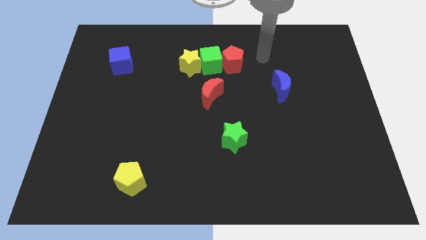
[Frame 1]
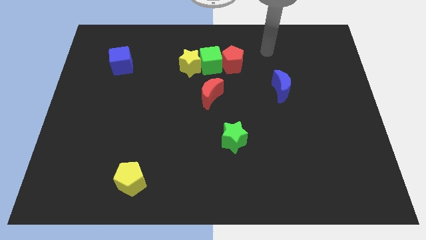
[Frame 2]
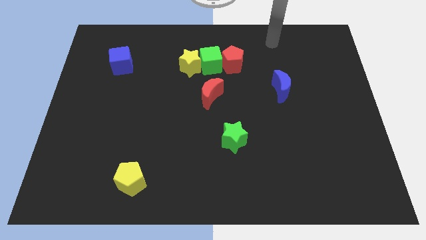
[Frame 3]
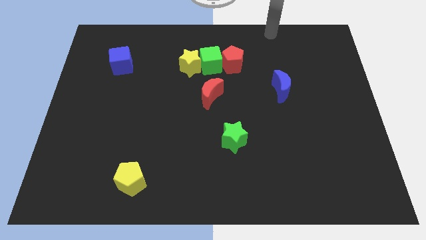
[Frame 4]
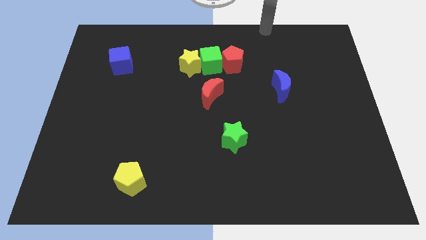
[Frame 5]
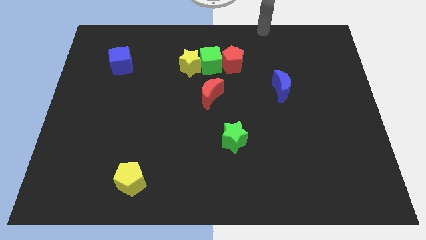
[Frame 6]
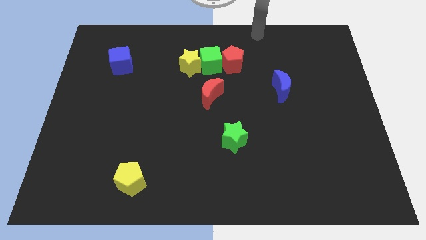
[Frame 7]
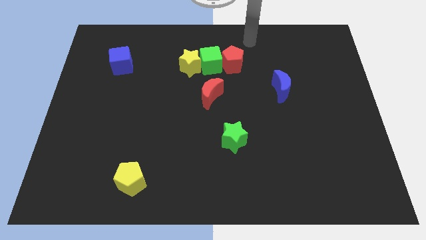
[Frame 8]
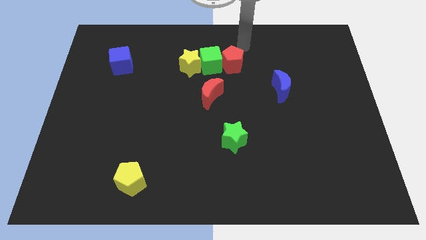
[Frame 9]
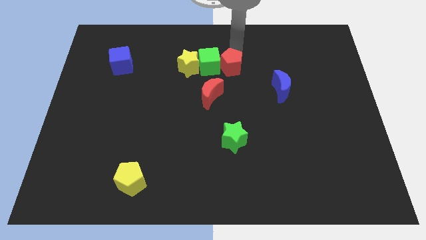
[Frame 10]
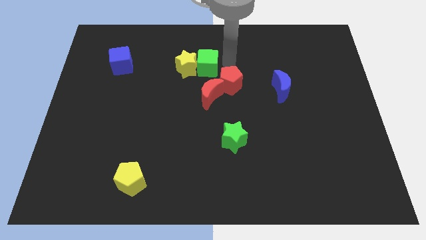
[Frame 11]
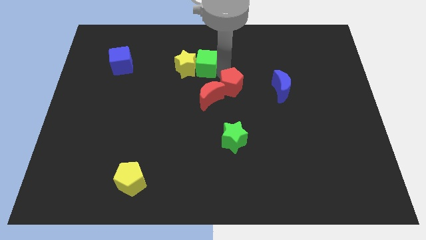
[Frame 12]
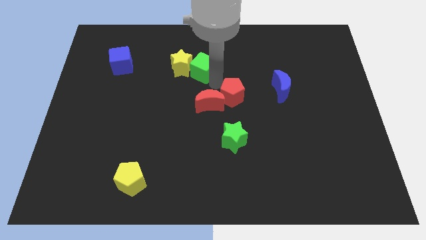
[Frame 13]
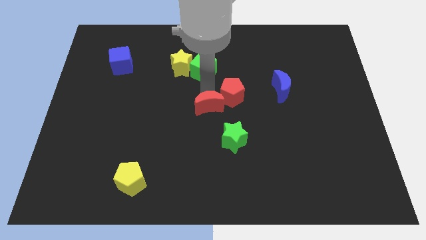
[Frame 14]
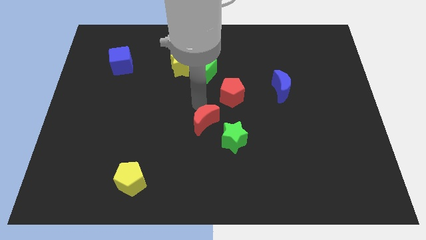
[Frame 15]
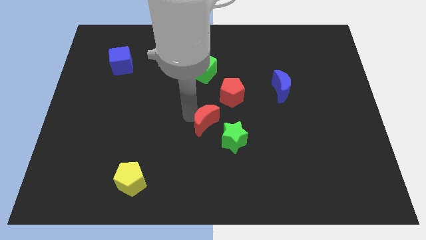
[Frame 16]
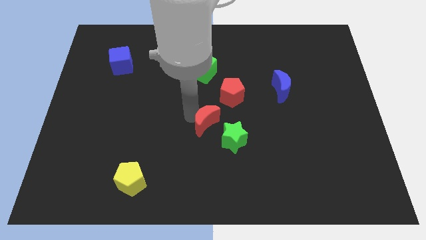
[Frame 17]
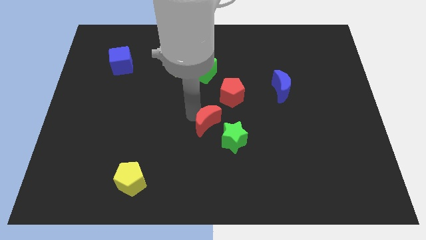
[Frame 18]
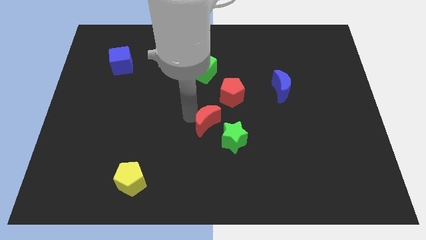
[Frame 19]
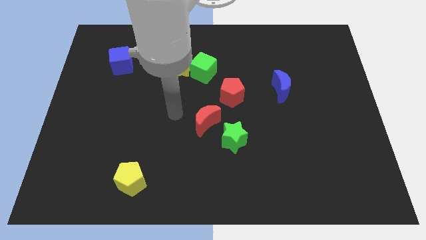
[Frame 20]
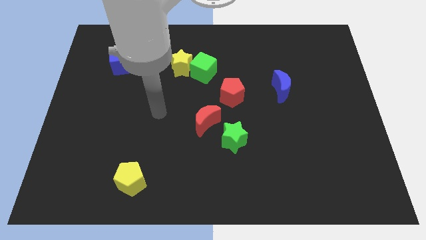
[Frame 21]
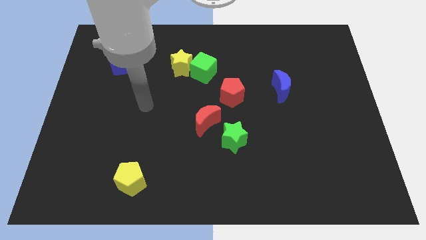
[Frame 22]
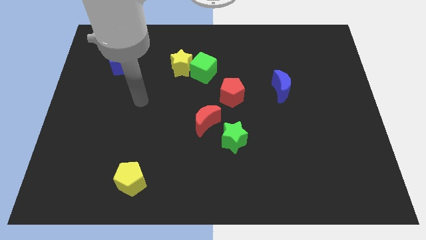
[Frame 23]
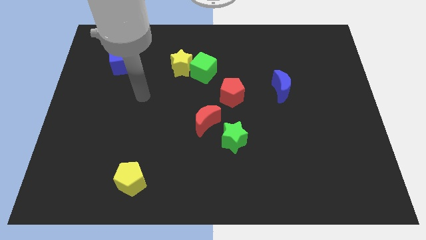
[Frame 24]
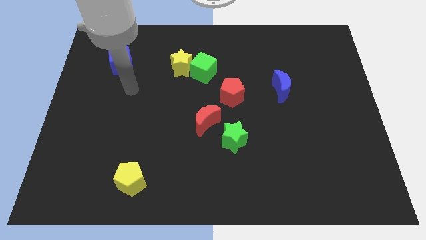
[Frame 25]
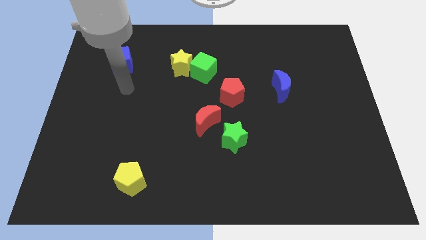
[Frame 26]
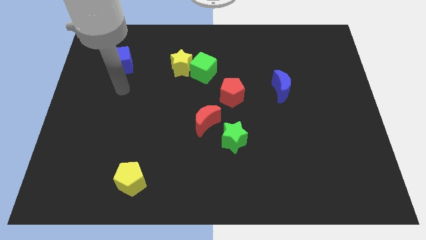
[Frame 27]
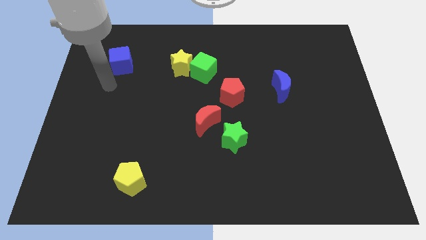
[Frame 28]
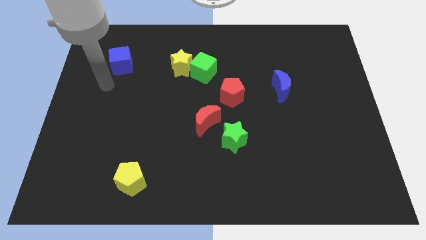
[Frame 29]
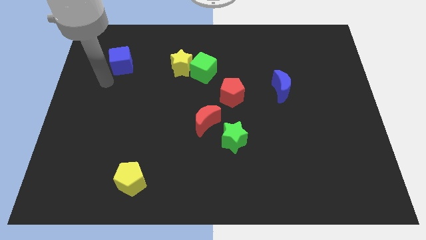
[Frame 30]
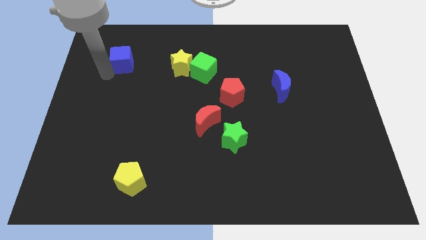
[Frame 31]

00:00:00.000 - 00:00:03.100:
push red blocks to center

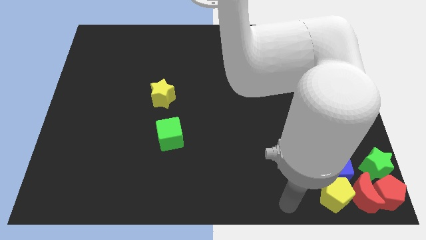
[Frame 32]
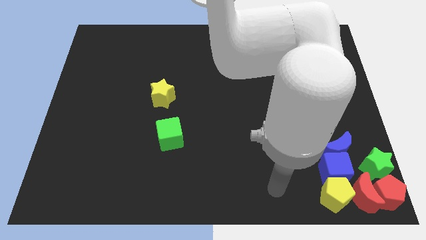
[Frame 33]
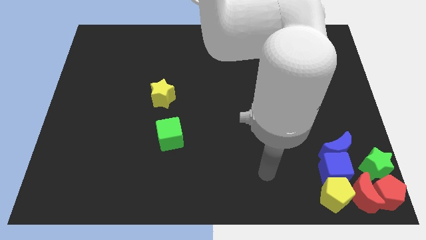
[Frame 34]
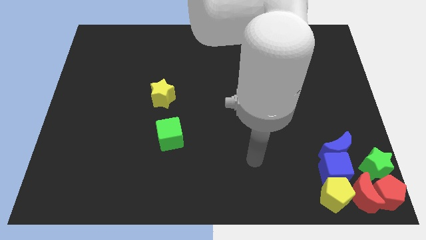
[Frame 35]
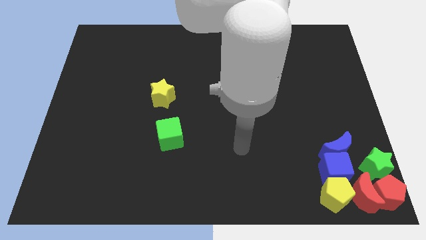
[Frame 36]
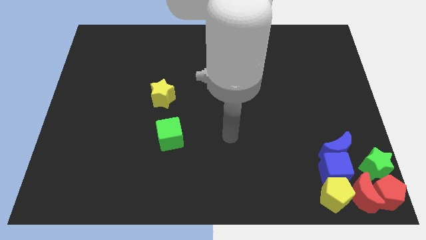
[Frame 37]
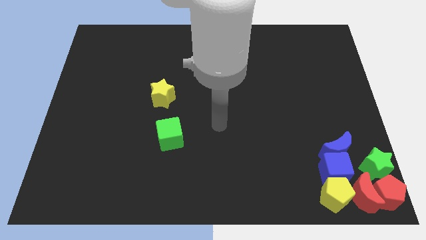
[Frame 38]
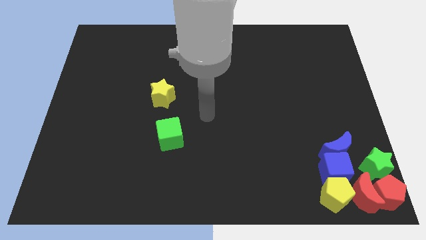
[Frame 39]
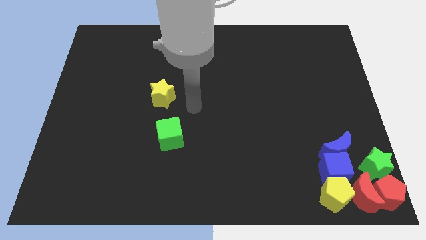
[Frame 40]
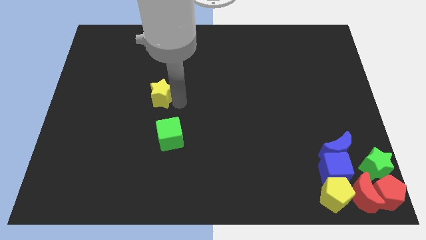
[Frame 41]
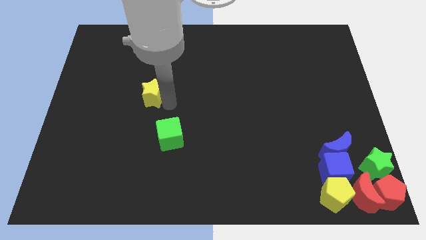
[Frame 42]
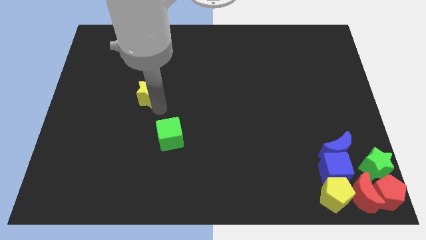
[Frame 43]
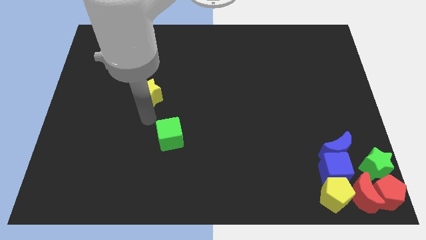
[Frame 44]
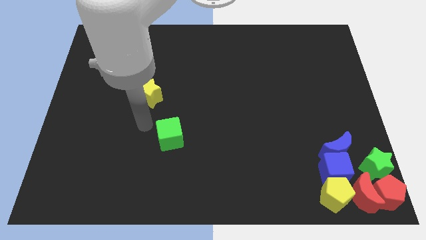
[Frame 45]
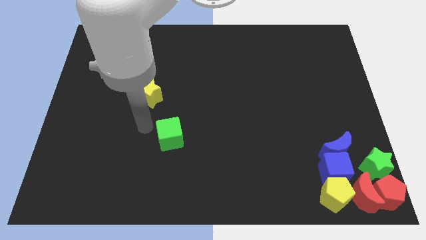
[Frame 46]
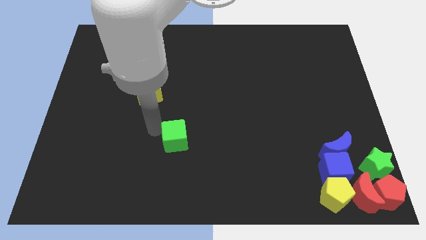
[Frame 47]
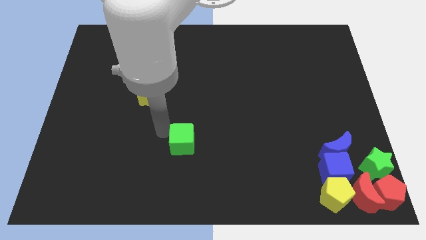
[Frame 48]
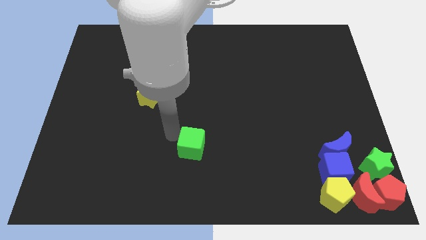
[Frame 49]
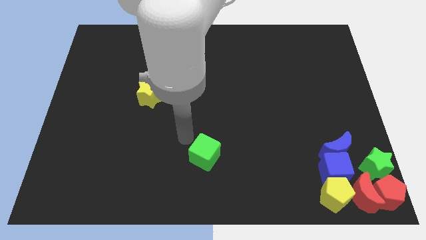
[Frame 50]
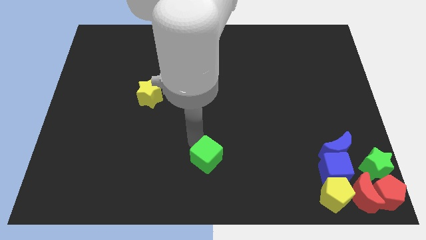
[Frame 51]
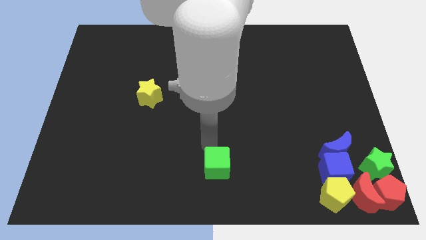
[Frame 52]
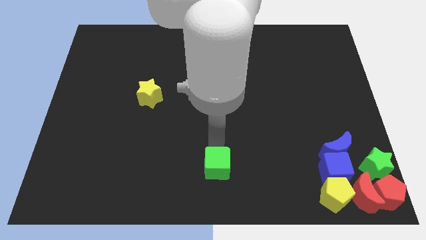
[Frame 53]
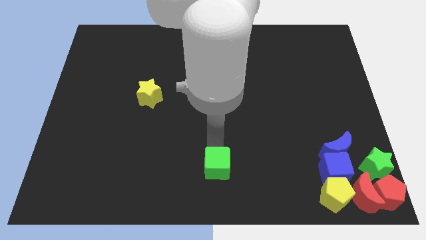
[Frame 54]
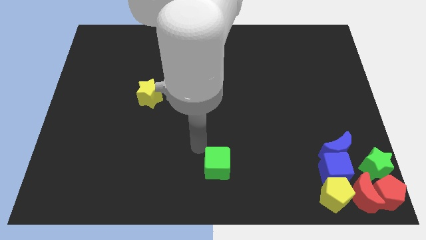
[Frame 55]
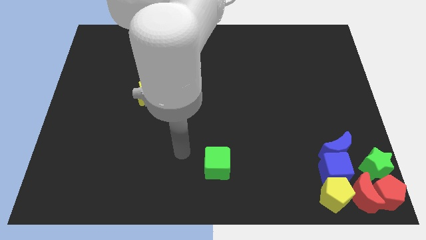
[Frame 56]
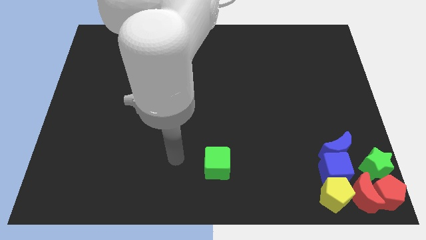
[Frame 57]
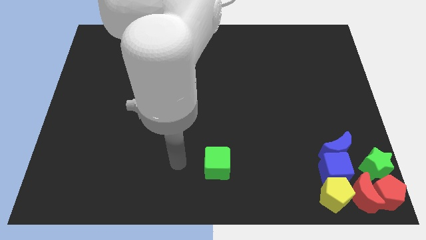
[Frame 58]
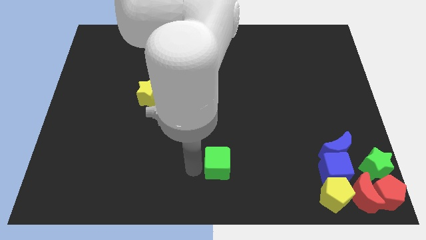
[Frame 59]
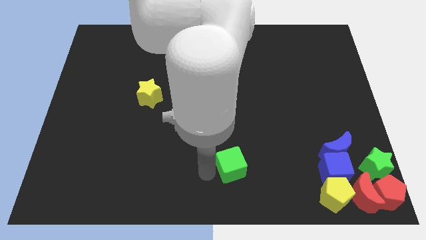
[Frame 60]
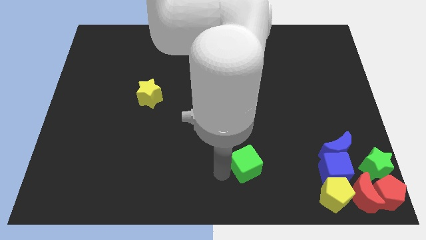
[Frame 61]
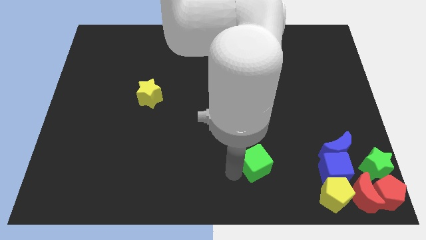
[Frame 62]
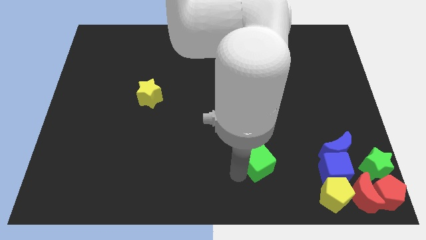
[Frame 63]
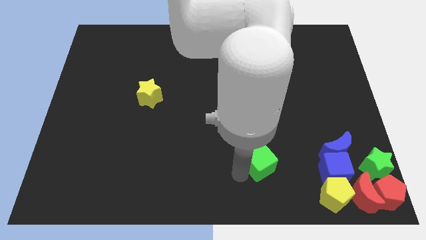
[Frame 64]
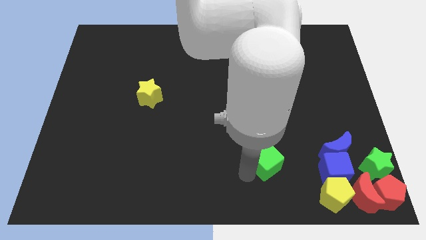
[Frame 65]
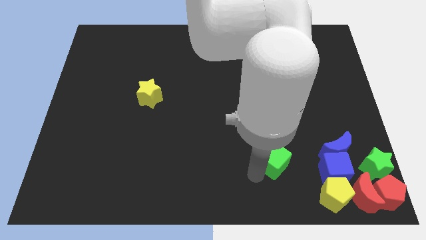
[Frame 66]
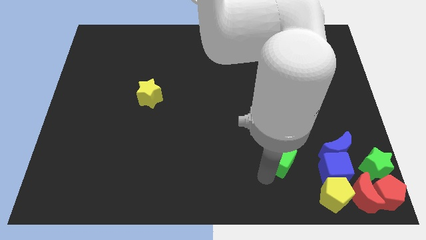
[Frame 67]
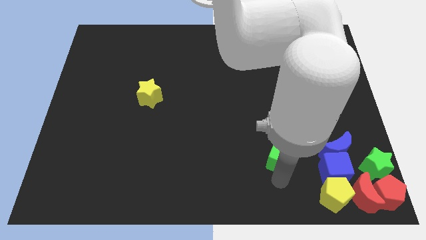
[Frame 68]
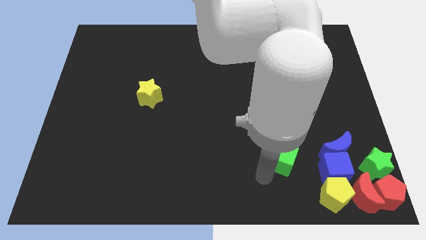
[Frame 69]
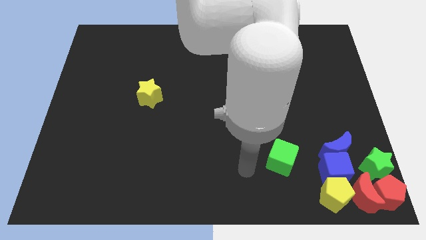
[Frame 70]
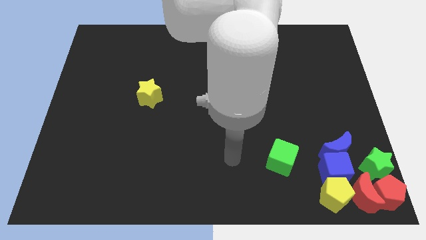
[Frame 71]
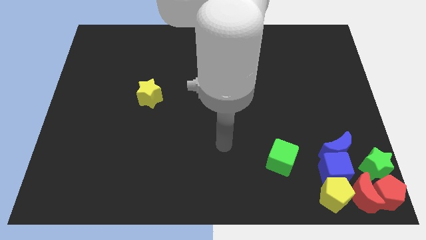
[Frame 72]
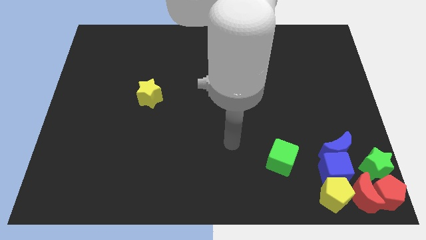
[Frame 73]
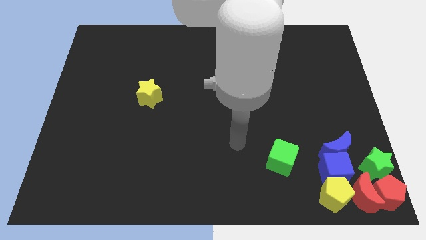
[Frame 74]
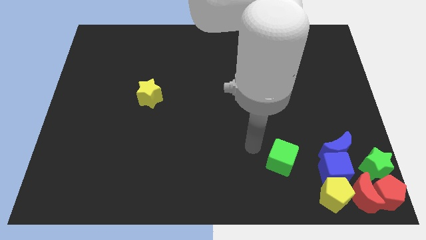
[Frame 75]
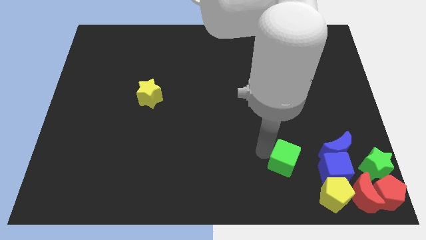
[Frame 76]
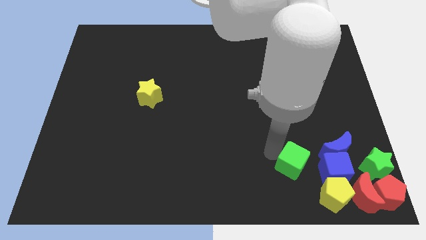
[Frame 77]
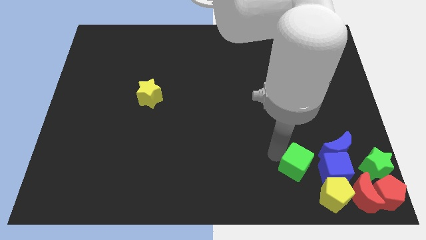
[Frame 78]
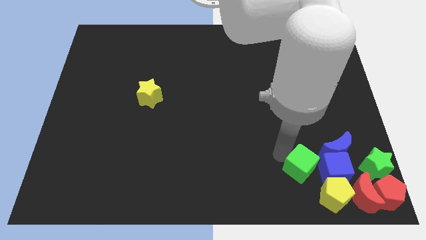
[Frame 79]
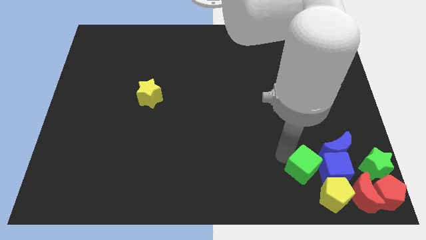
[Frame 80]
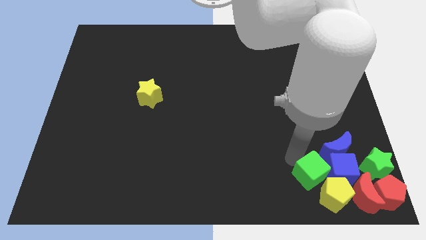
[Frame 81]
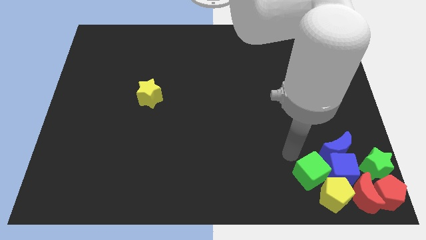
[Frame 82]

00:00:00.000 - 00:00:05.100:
slide the green cube into the left side of the blue cube

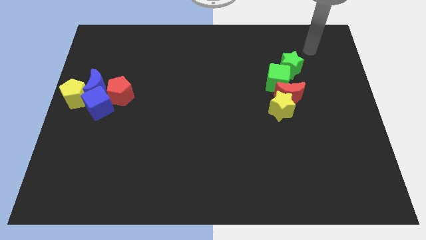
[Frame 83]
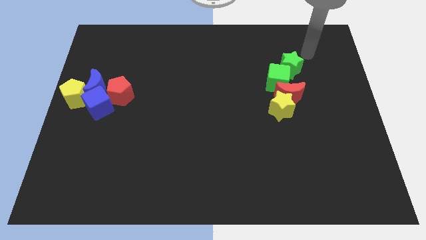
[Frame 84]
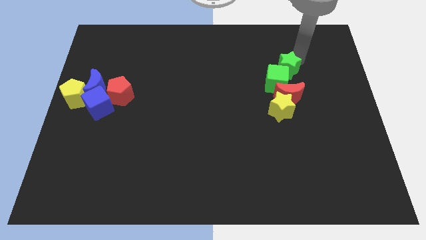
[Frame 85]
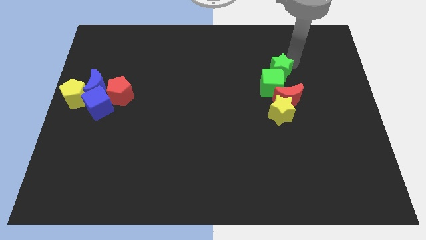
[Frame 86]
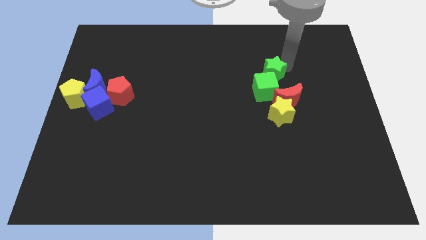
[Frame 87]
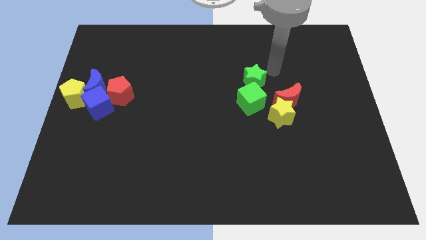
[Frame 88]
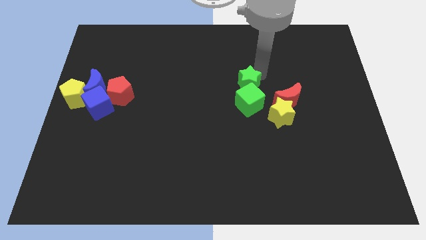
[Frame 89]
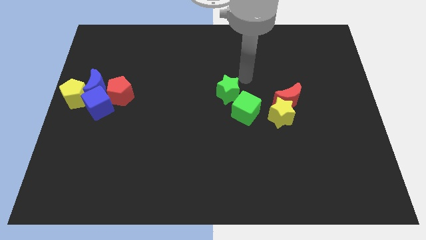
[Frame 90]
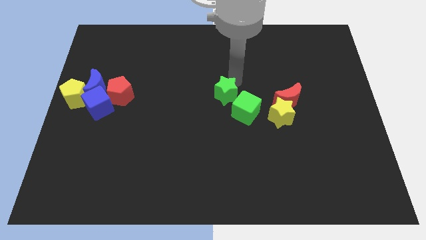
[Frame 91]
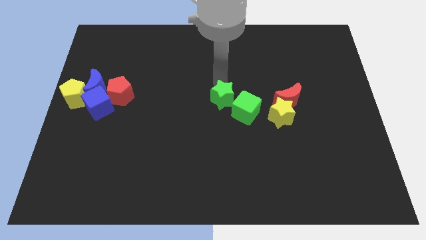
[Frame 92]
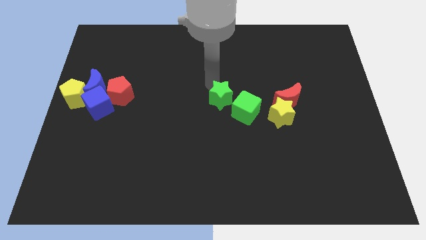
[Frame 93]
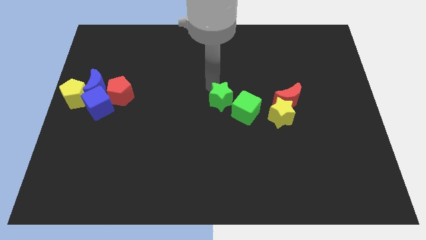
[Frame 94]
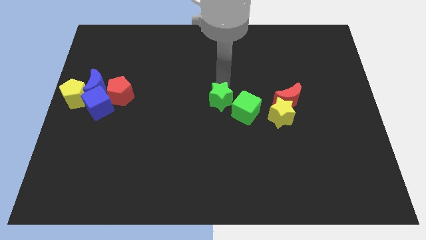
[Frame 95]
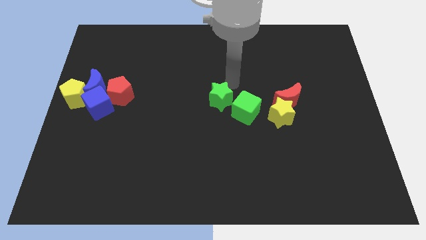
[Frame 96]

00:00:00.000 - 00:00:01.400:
push the green star to the center along with the green cube
